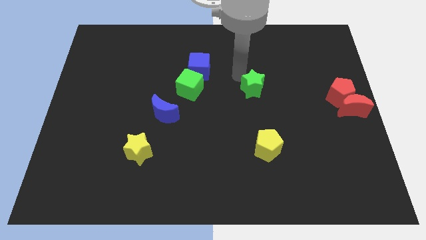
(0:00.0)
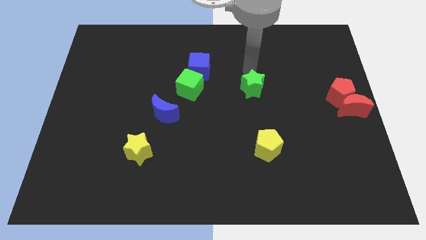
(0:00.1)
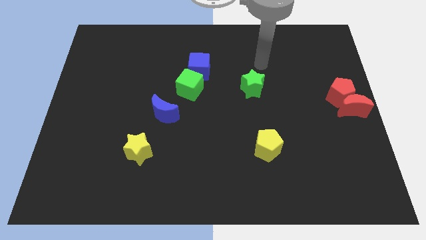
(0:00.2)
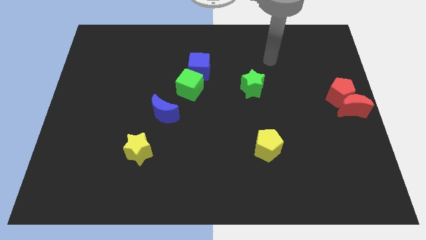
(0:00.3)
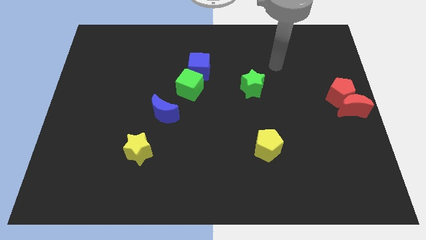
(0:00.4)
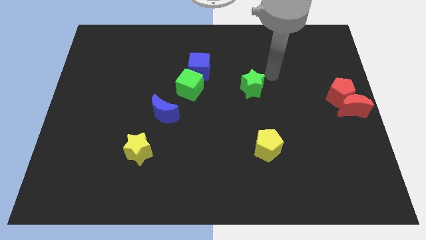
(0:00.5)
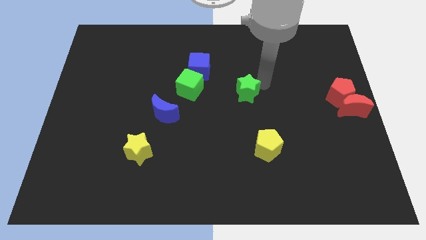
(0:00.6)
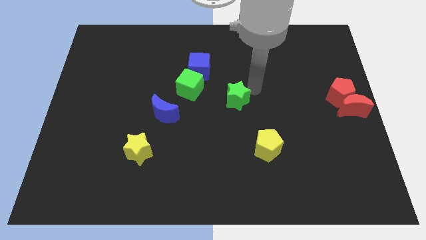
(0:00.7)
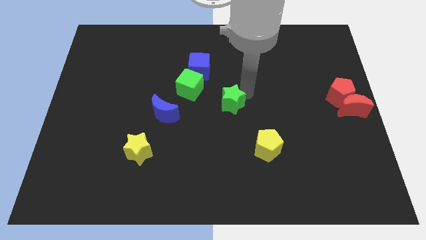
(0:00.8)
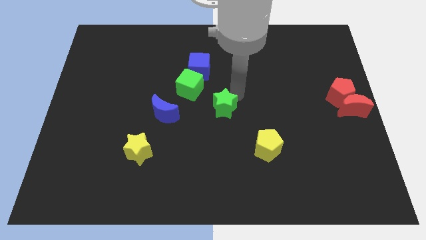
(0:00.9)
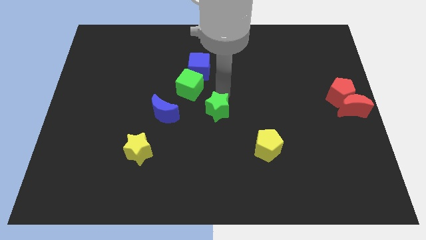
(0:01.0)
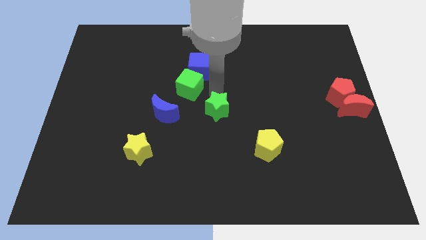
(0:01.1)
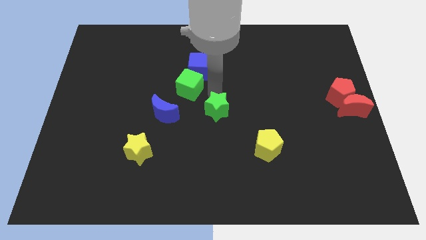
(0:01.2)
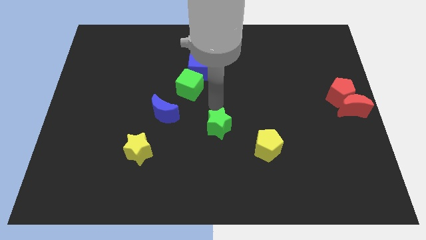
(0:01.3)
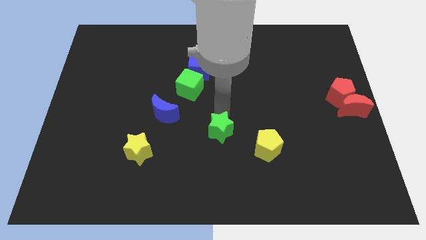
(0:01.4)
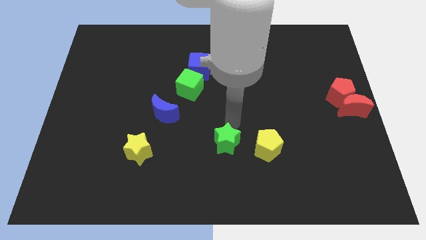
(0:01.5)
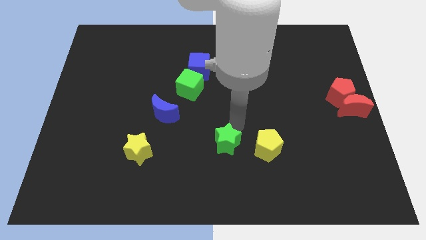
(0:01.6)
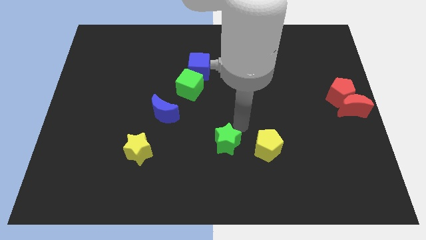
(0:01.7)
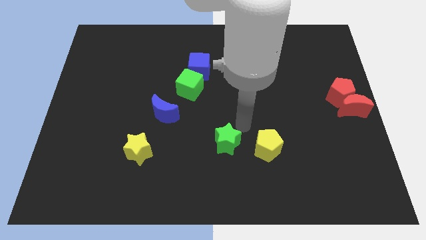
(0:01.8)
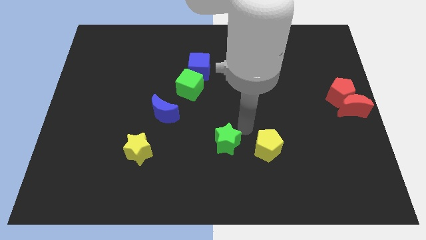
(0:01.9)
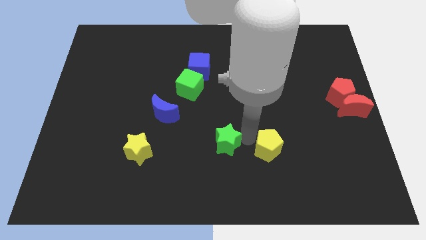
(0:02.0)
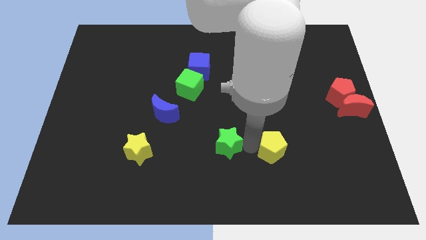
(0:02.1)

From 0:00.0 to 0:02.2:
place the green star on the left side of the yellow pentagon

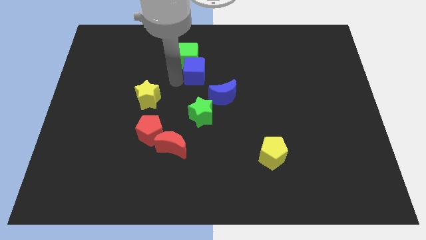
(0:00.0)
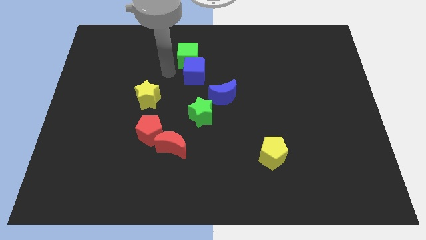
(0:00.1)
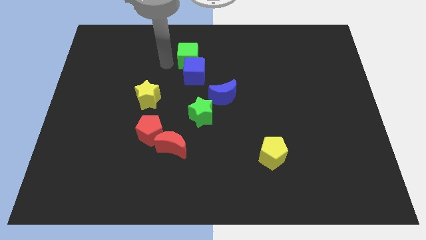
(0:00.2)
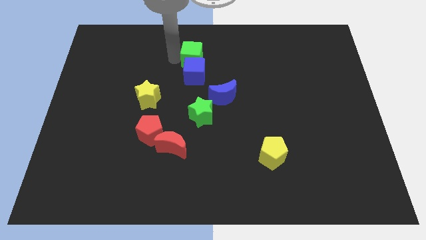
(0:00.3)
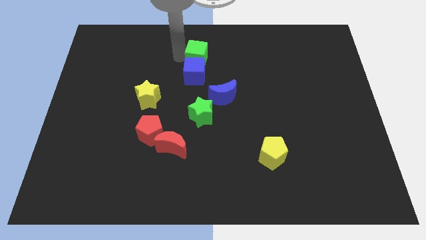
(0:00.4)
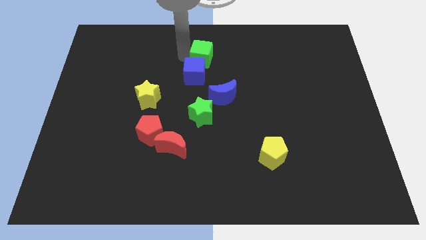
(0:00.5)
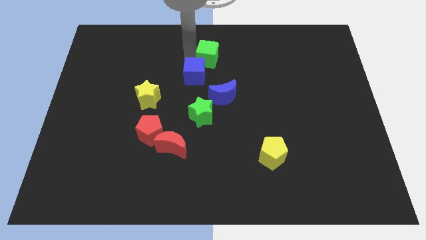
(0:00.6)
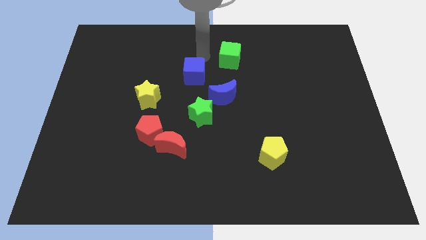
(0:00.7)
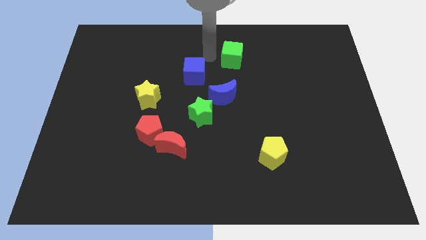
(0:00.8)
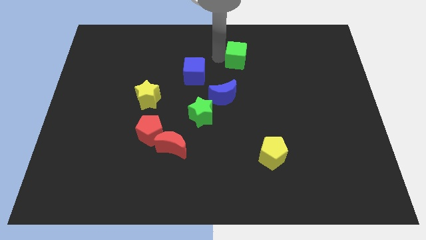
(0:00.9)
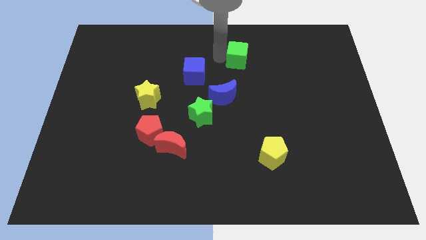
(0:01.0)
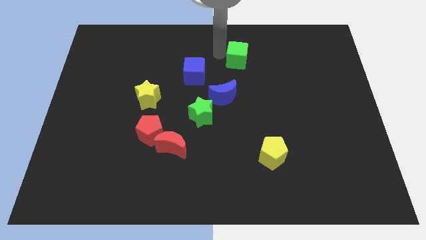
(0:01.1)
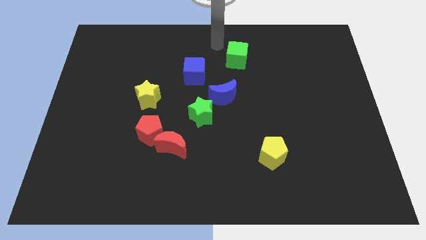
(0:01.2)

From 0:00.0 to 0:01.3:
push the green cube to the right of the board

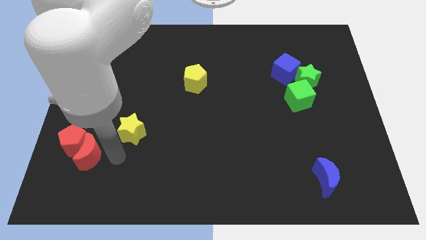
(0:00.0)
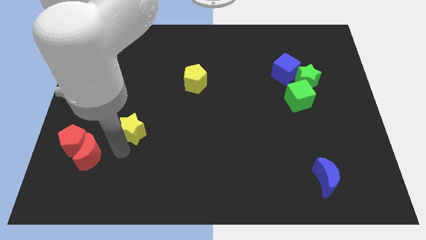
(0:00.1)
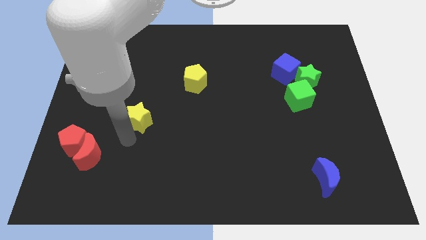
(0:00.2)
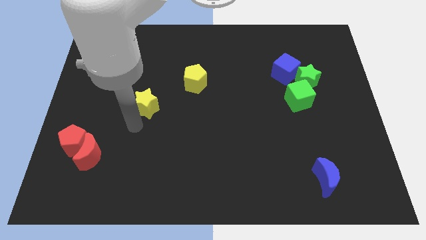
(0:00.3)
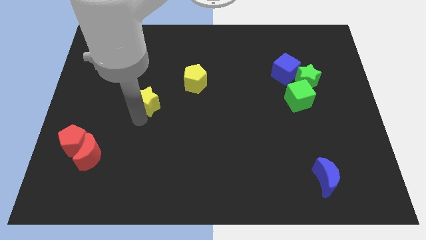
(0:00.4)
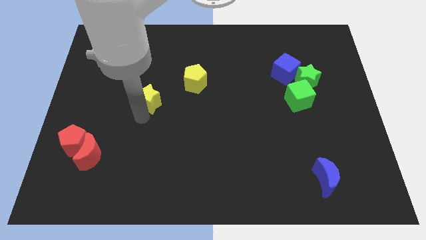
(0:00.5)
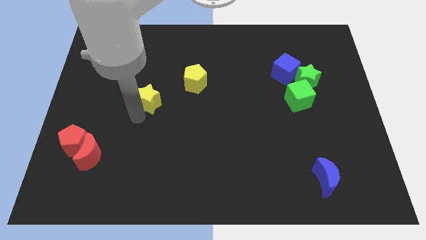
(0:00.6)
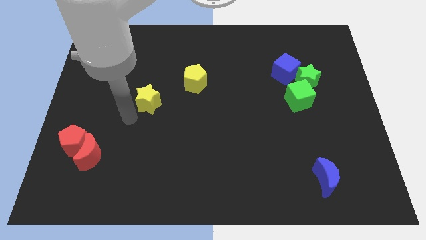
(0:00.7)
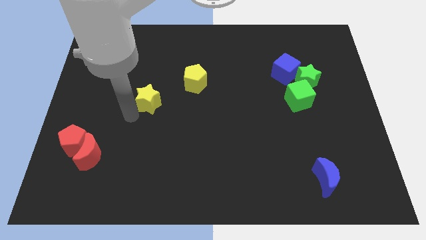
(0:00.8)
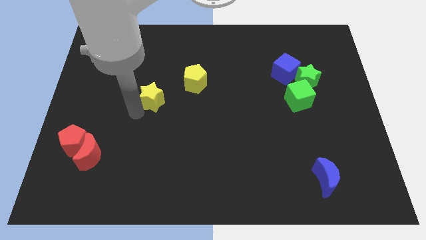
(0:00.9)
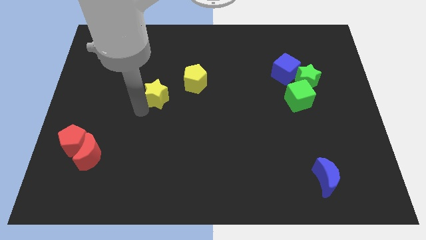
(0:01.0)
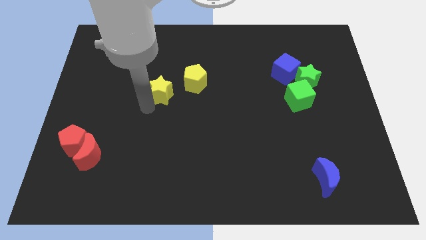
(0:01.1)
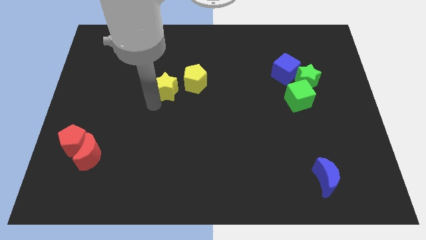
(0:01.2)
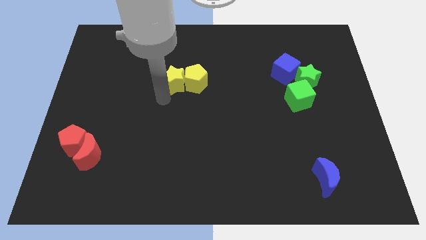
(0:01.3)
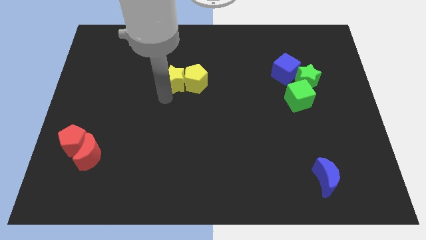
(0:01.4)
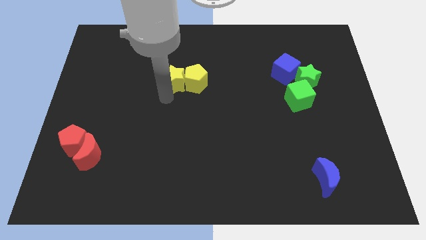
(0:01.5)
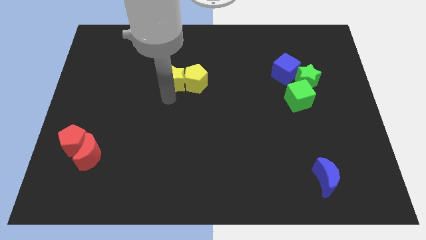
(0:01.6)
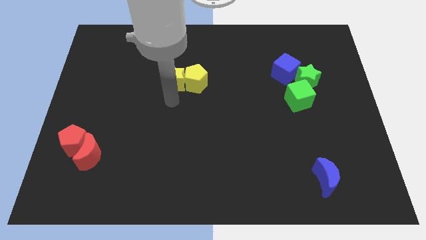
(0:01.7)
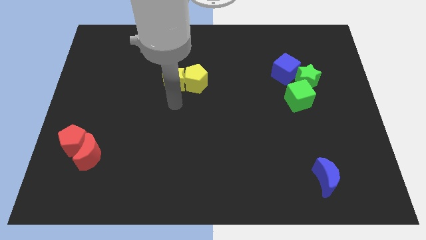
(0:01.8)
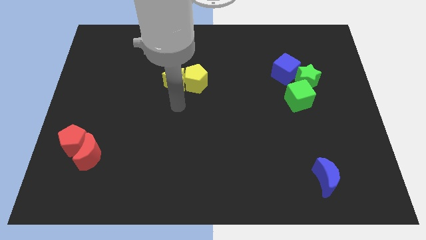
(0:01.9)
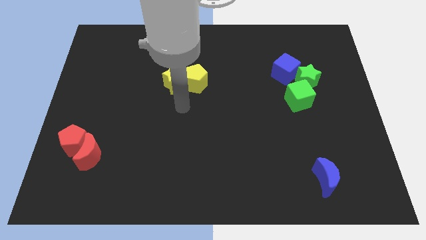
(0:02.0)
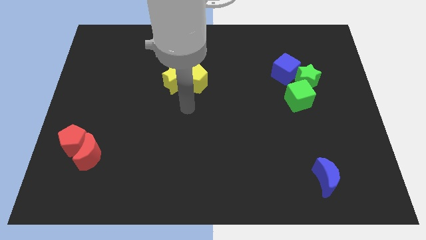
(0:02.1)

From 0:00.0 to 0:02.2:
move the yellow star left beside the yellow pentagon

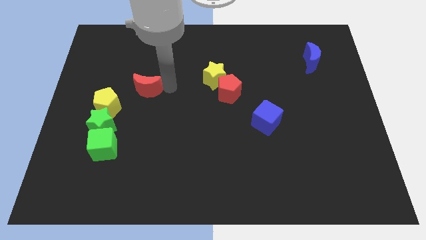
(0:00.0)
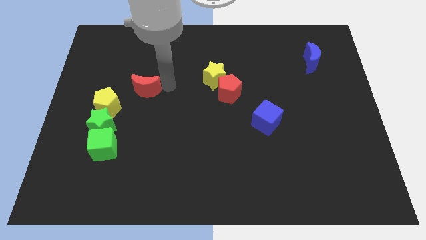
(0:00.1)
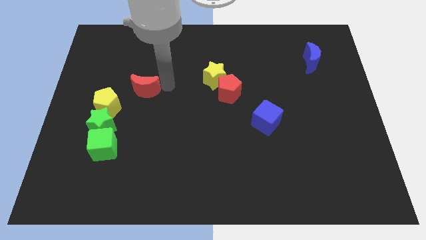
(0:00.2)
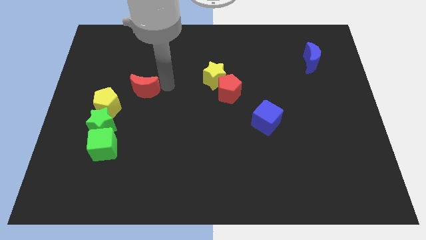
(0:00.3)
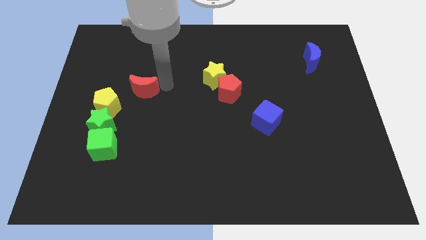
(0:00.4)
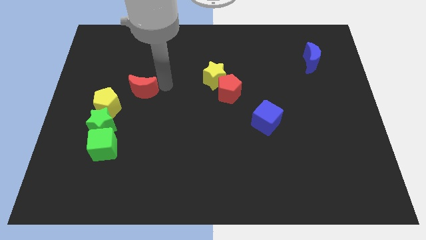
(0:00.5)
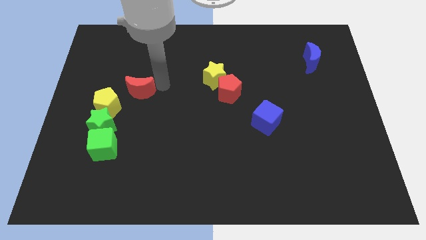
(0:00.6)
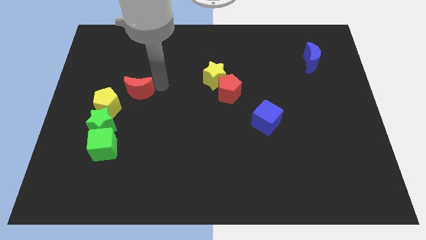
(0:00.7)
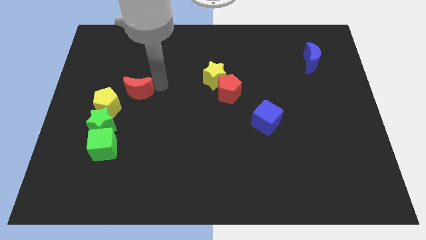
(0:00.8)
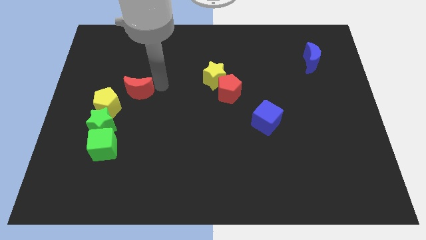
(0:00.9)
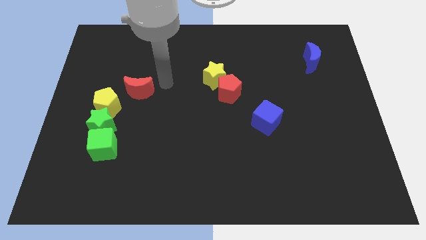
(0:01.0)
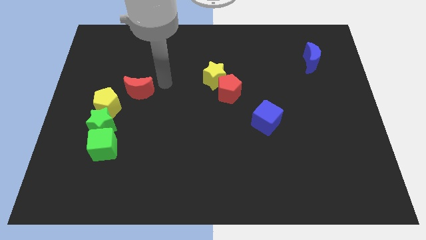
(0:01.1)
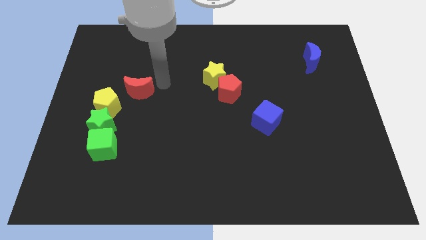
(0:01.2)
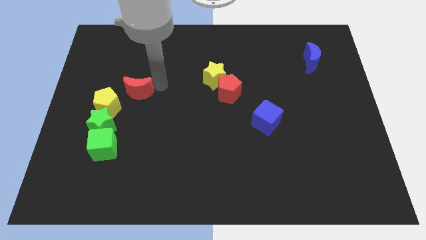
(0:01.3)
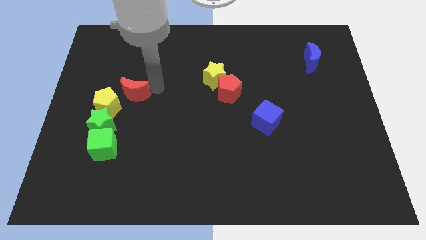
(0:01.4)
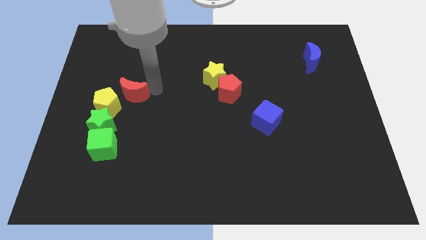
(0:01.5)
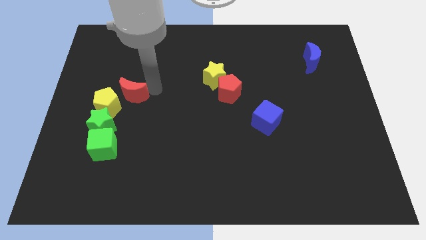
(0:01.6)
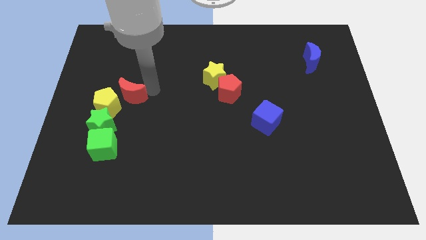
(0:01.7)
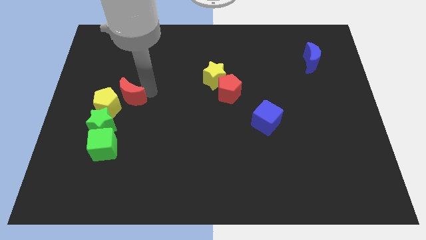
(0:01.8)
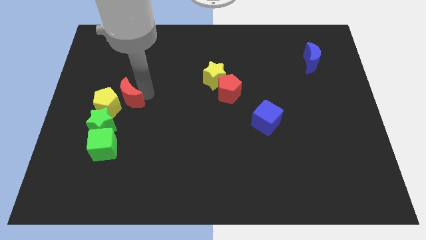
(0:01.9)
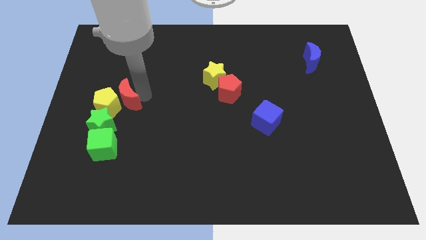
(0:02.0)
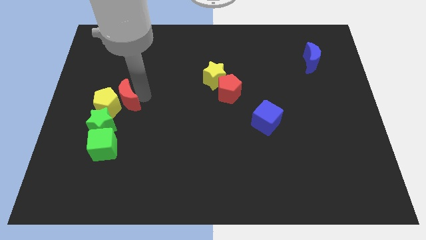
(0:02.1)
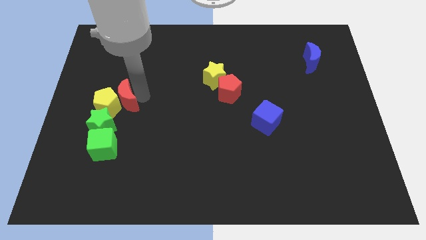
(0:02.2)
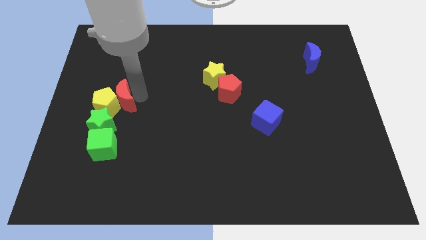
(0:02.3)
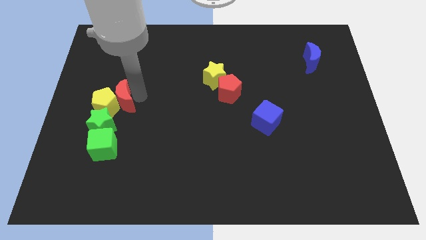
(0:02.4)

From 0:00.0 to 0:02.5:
make the red crescent to touch the yellow pentagon

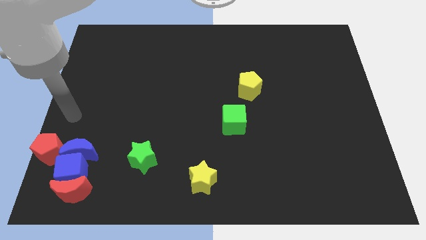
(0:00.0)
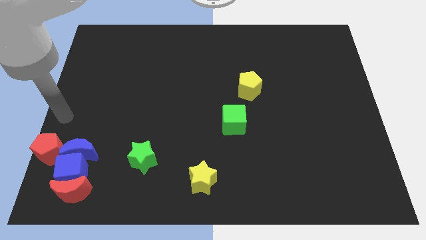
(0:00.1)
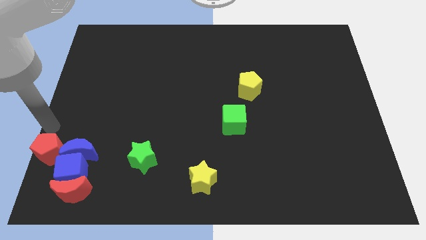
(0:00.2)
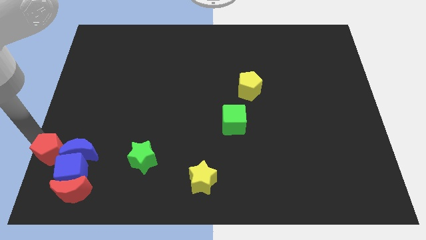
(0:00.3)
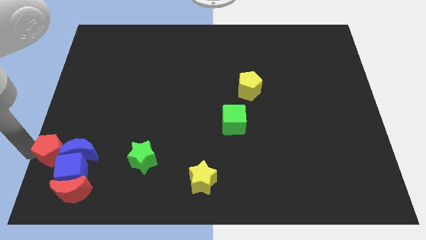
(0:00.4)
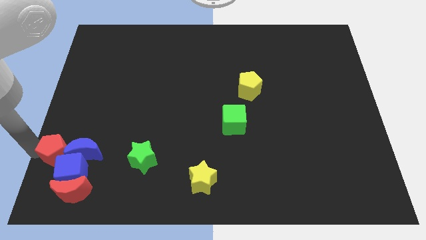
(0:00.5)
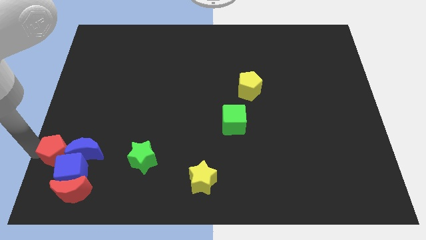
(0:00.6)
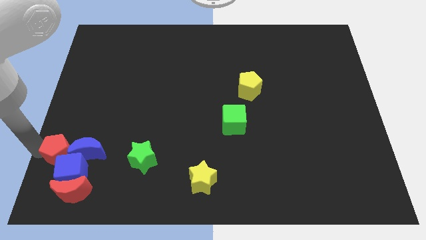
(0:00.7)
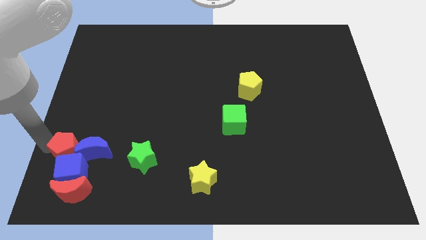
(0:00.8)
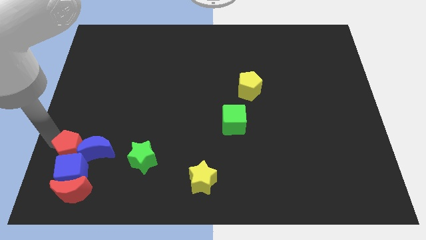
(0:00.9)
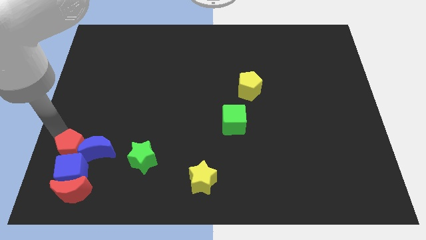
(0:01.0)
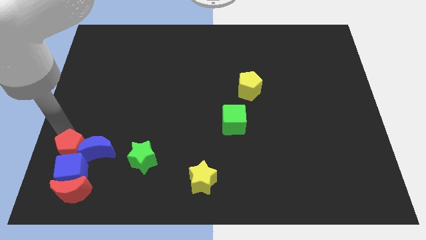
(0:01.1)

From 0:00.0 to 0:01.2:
push the red pentagon to the left of the blue crescent
